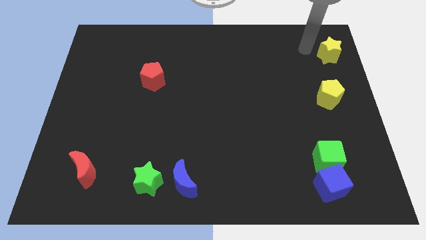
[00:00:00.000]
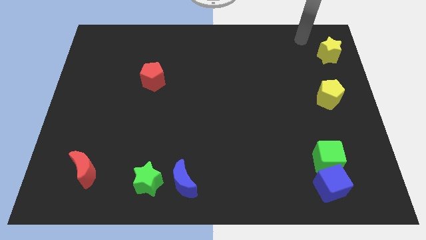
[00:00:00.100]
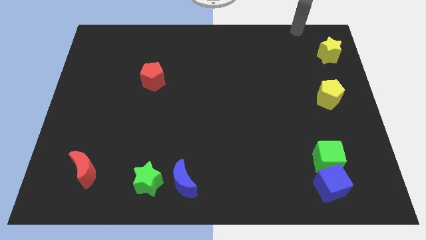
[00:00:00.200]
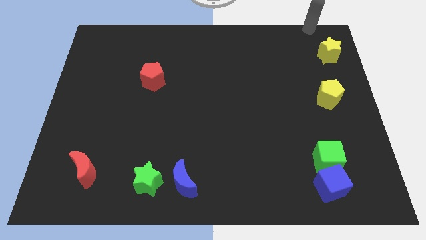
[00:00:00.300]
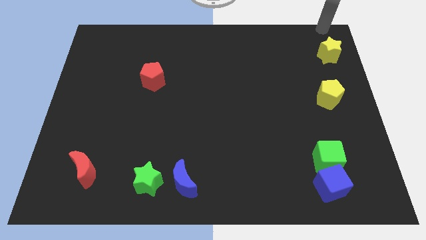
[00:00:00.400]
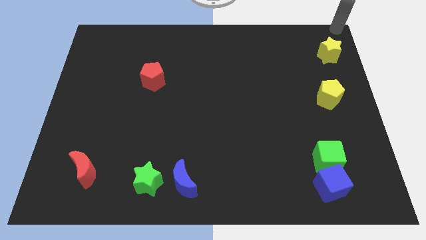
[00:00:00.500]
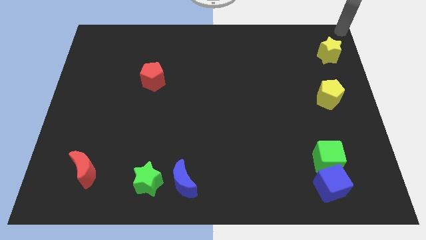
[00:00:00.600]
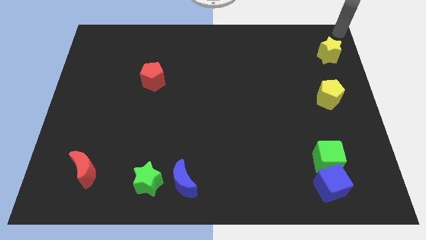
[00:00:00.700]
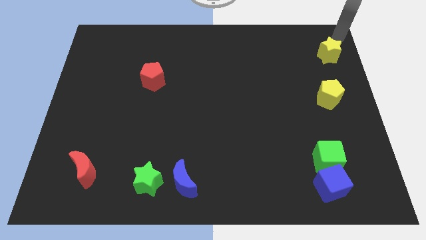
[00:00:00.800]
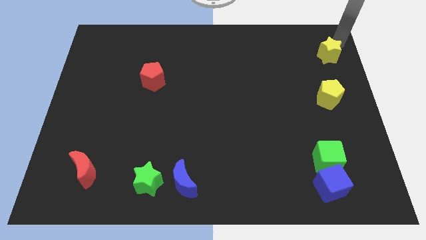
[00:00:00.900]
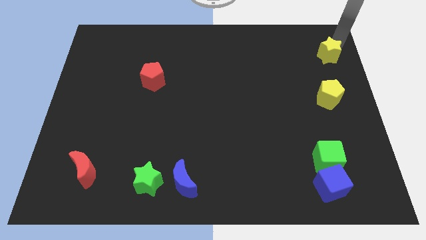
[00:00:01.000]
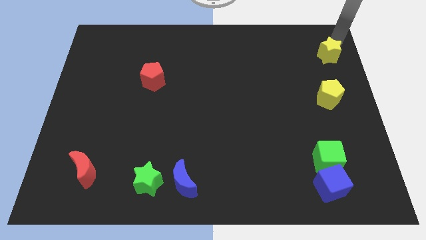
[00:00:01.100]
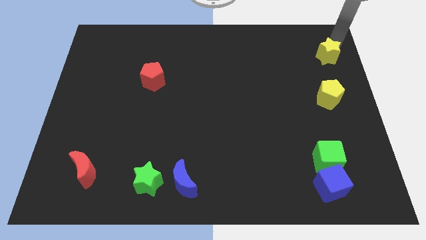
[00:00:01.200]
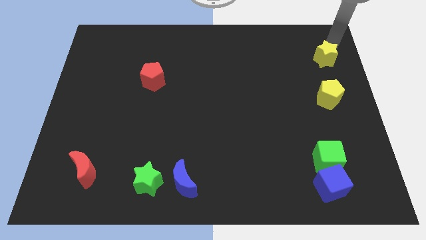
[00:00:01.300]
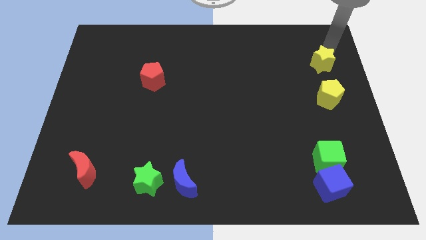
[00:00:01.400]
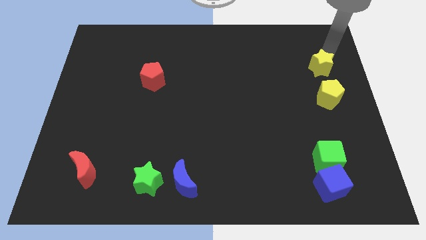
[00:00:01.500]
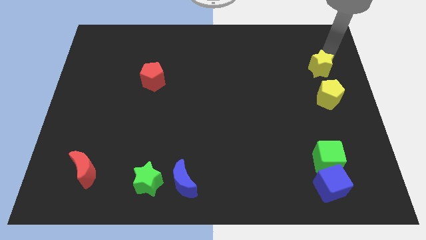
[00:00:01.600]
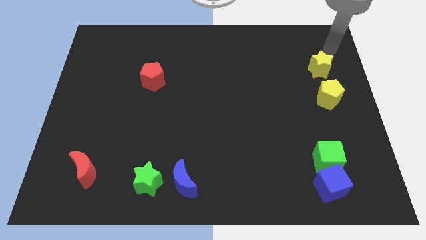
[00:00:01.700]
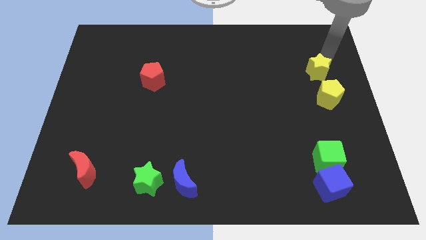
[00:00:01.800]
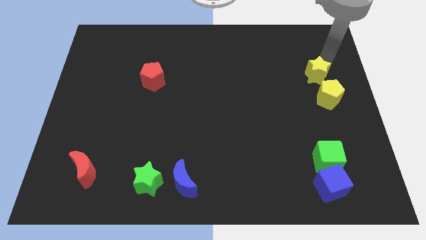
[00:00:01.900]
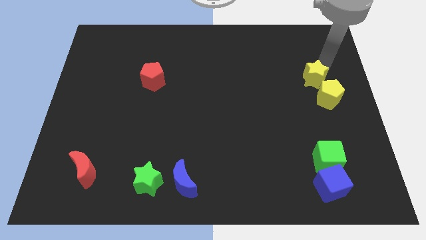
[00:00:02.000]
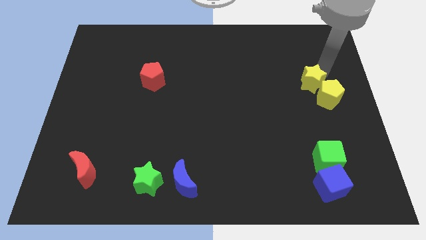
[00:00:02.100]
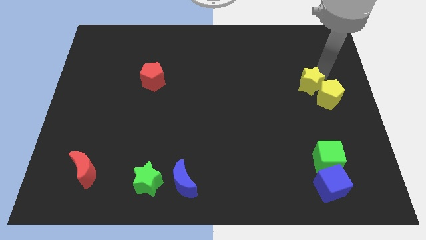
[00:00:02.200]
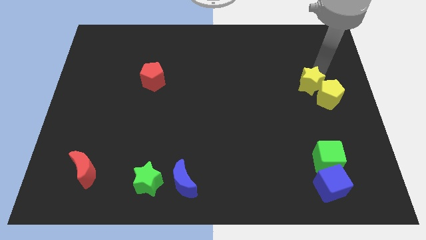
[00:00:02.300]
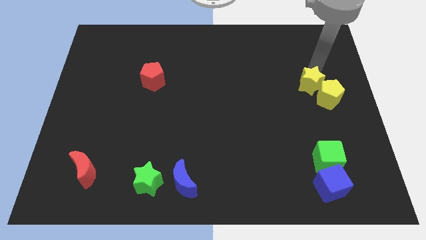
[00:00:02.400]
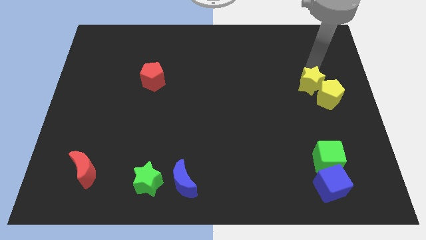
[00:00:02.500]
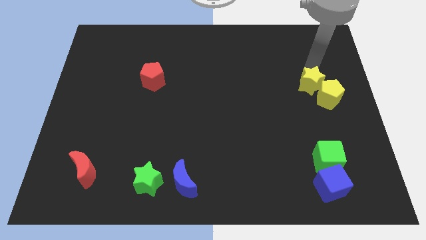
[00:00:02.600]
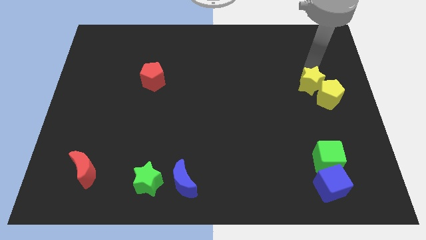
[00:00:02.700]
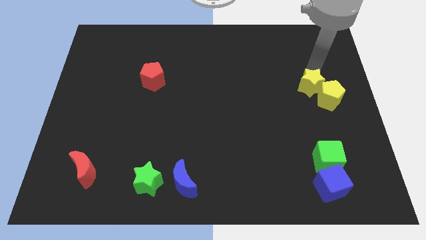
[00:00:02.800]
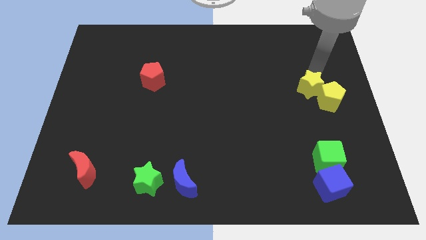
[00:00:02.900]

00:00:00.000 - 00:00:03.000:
push the yellow star into the yellow pentagon

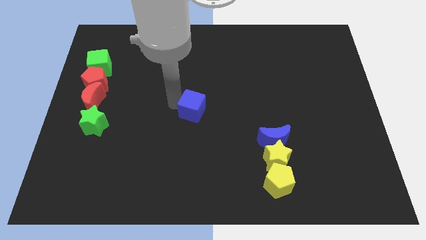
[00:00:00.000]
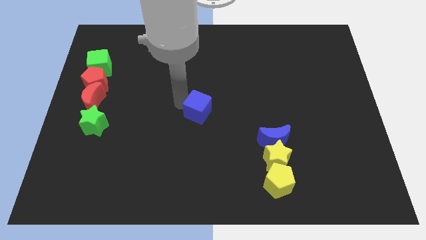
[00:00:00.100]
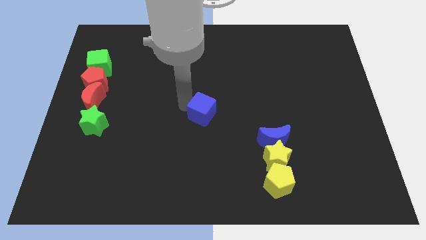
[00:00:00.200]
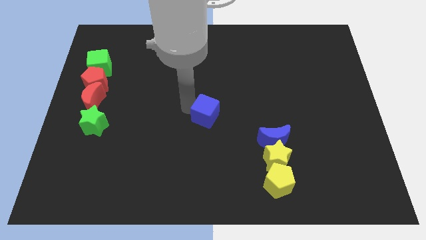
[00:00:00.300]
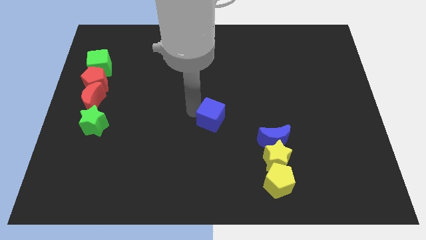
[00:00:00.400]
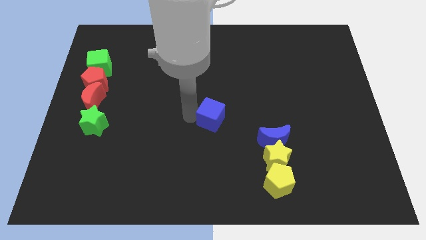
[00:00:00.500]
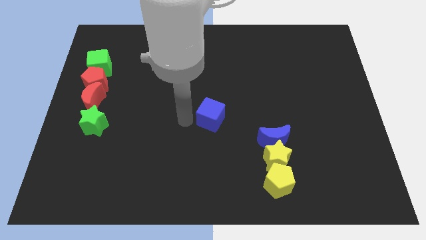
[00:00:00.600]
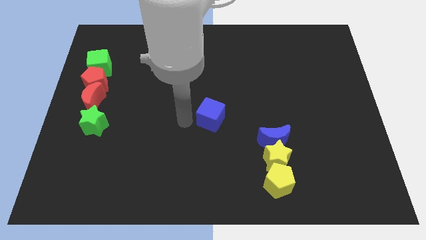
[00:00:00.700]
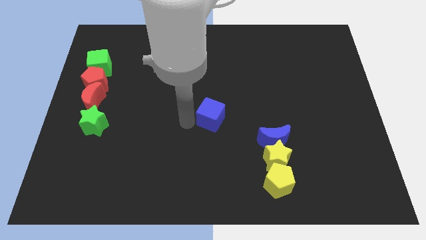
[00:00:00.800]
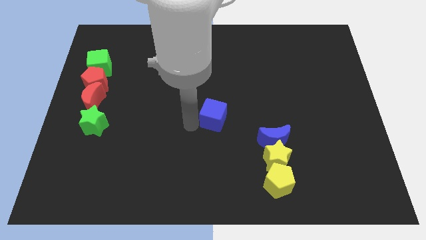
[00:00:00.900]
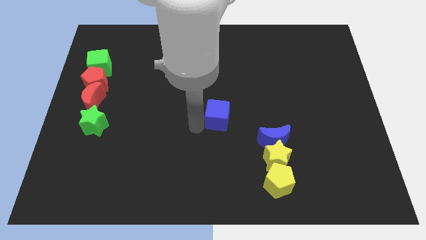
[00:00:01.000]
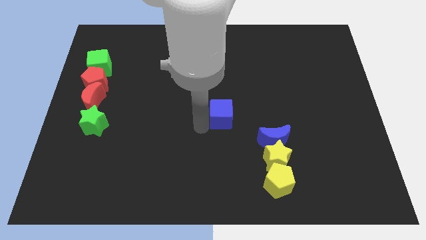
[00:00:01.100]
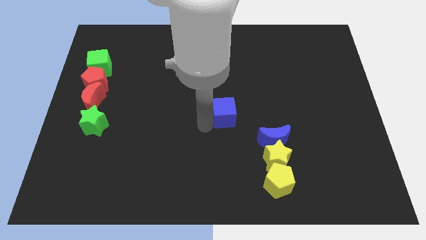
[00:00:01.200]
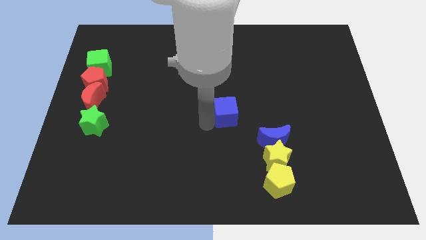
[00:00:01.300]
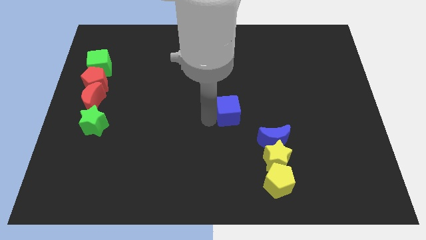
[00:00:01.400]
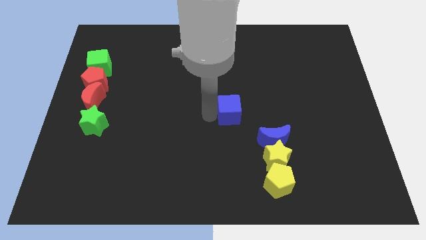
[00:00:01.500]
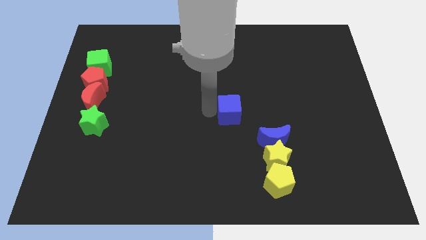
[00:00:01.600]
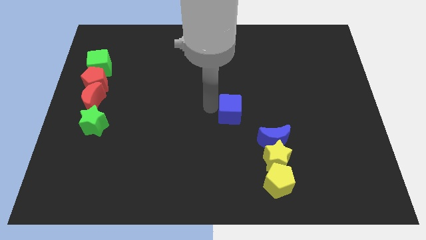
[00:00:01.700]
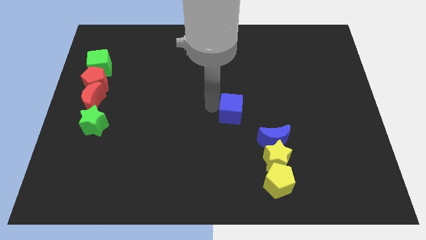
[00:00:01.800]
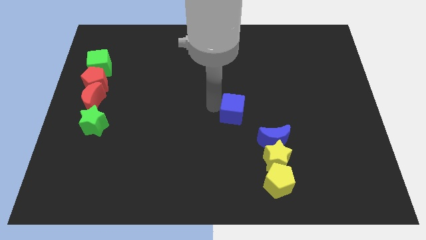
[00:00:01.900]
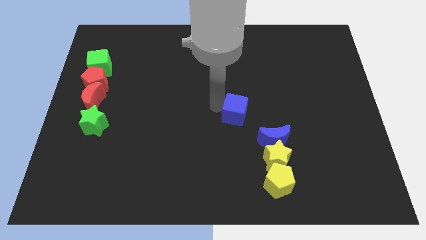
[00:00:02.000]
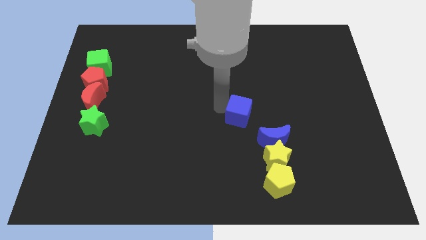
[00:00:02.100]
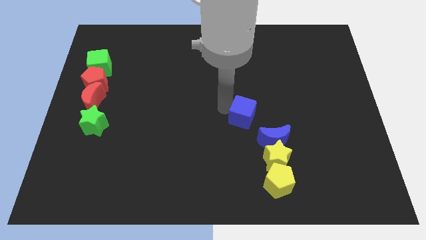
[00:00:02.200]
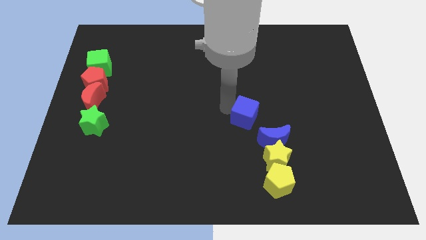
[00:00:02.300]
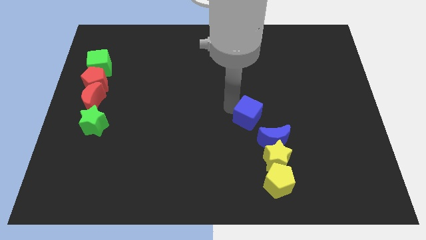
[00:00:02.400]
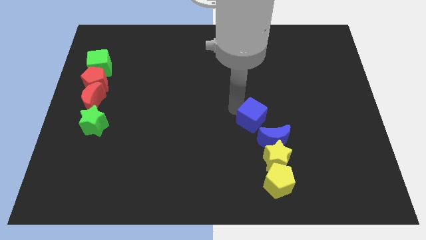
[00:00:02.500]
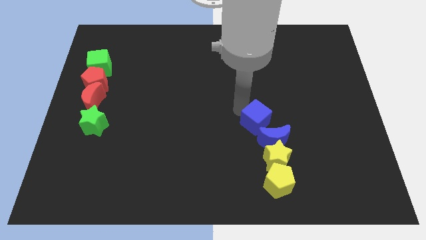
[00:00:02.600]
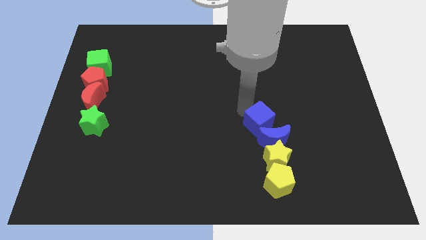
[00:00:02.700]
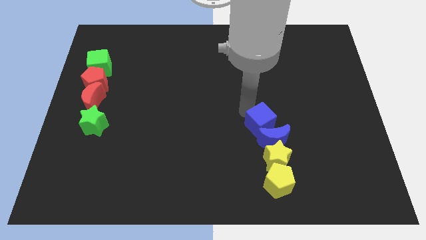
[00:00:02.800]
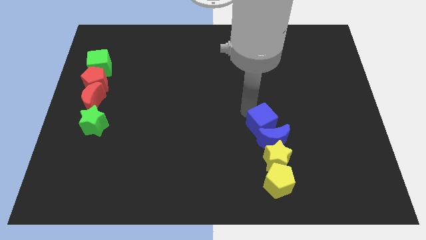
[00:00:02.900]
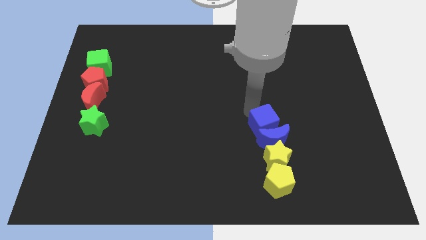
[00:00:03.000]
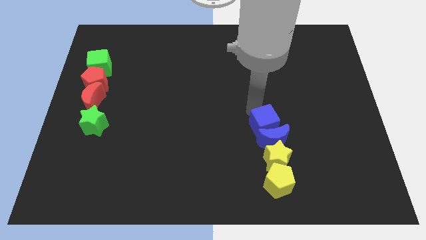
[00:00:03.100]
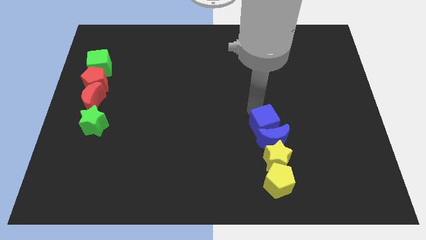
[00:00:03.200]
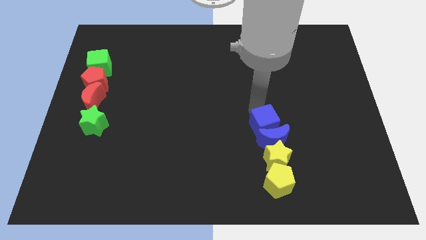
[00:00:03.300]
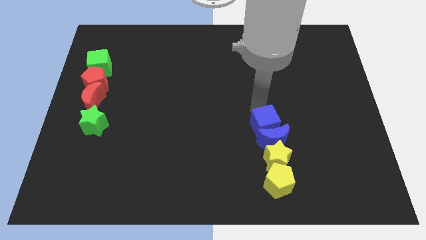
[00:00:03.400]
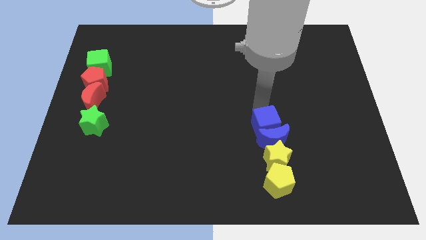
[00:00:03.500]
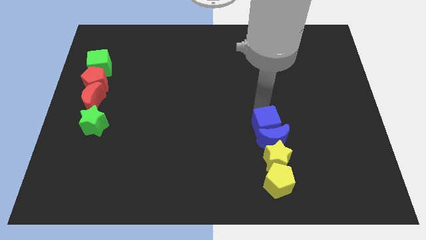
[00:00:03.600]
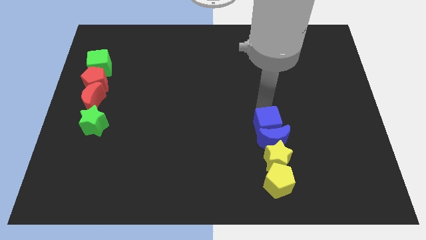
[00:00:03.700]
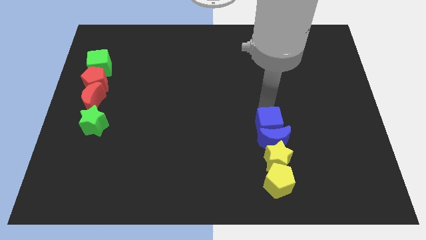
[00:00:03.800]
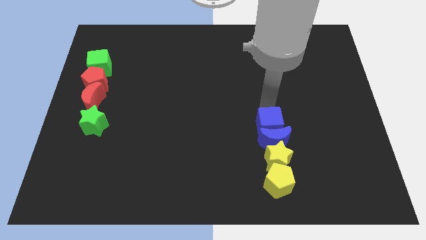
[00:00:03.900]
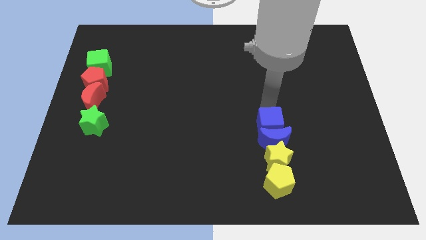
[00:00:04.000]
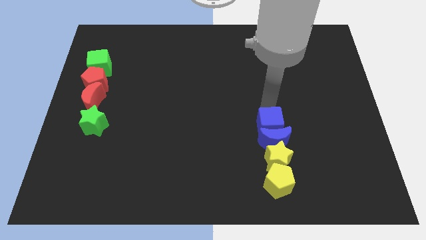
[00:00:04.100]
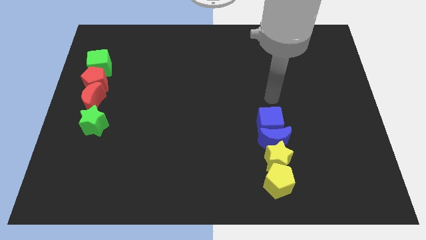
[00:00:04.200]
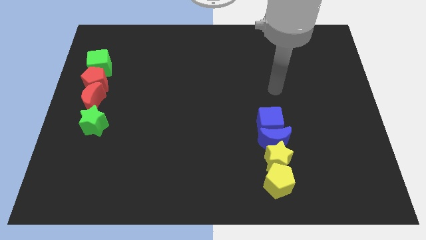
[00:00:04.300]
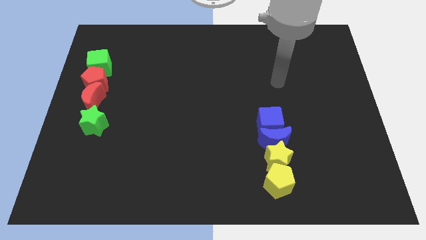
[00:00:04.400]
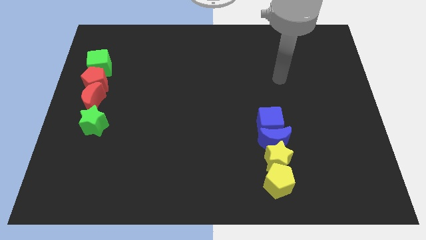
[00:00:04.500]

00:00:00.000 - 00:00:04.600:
move the blue cube into the top side of the blue crescent

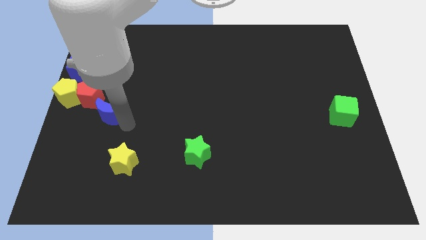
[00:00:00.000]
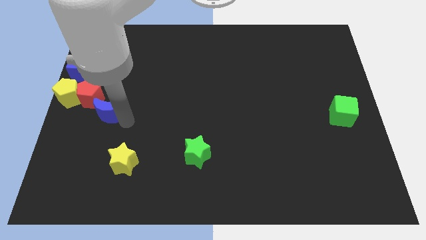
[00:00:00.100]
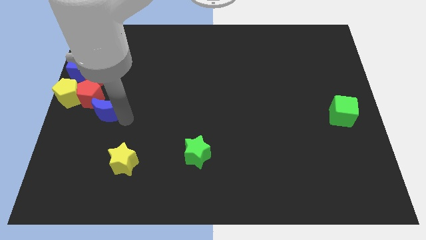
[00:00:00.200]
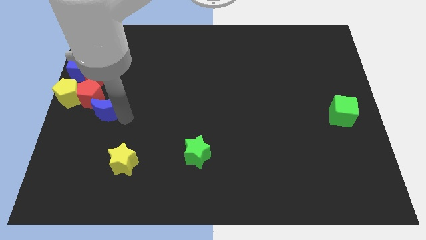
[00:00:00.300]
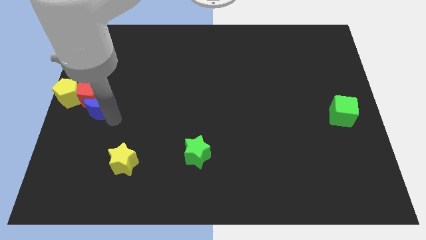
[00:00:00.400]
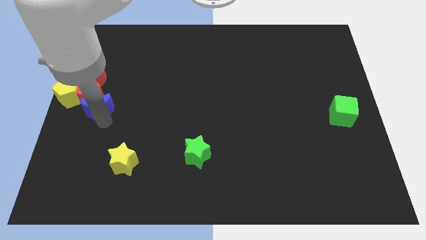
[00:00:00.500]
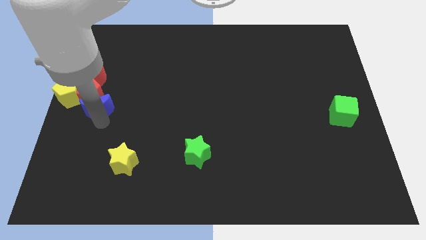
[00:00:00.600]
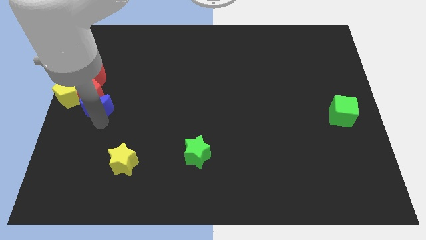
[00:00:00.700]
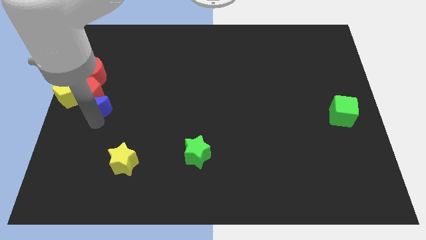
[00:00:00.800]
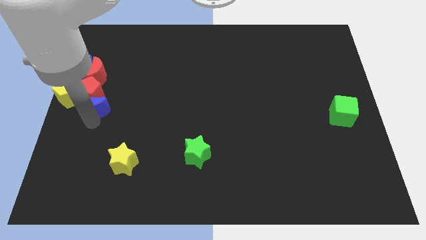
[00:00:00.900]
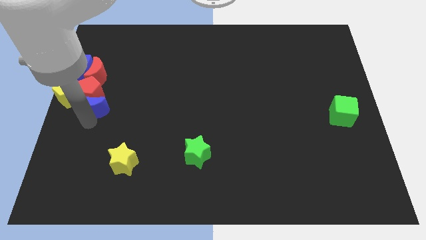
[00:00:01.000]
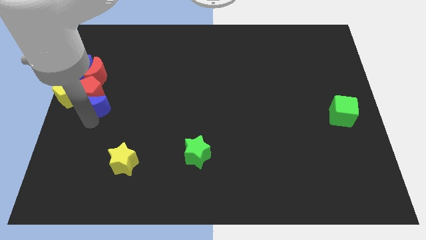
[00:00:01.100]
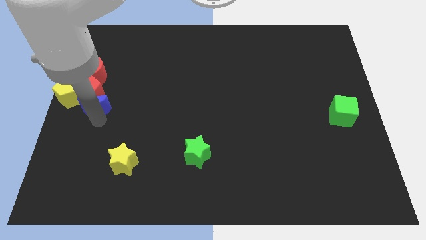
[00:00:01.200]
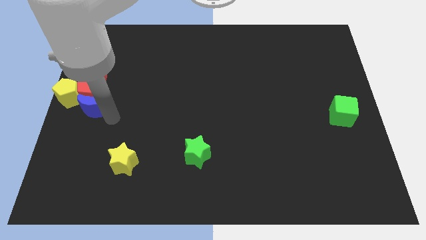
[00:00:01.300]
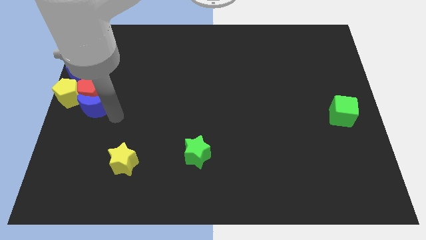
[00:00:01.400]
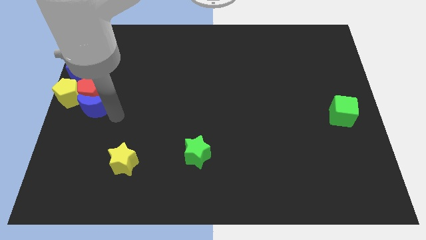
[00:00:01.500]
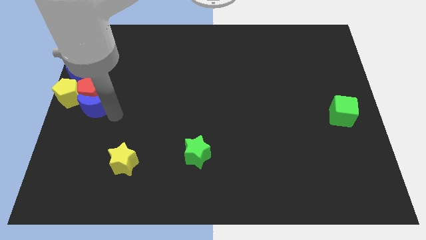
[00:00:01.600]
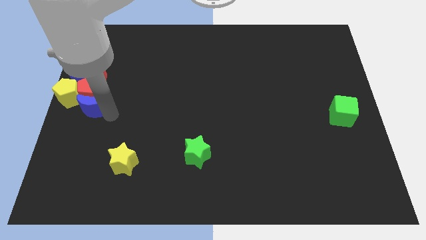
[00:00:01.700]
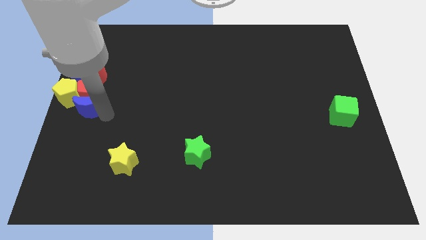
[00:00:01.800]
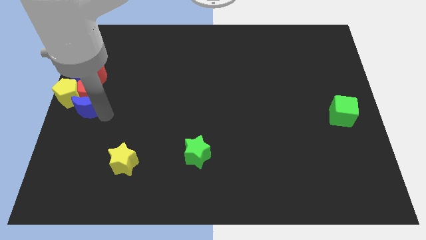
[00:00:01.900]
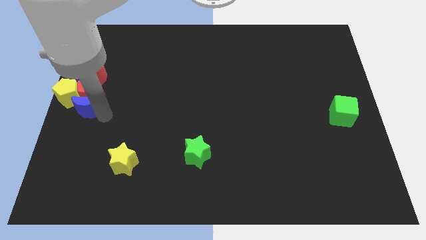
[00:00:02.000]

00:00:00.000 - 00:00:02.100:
push the blue crescent below into the red pentagon
